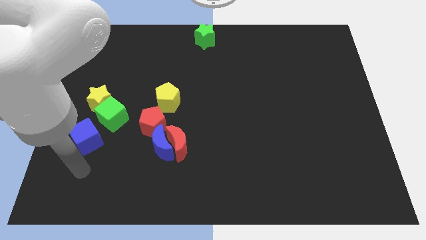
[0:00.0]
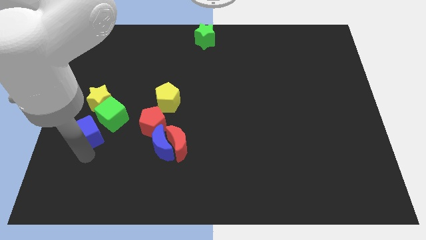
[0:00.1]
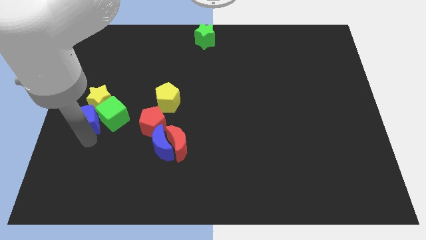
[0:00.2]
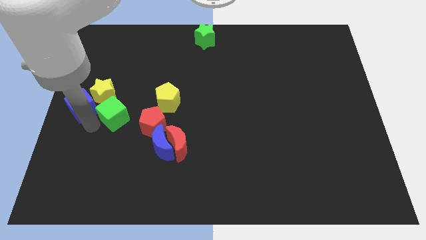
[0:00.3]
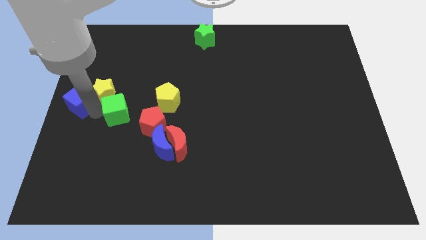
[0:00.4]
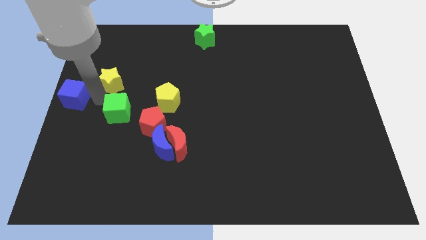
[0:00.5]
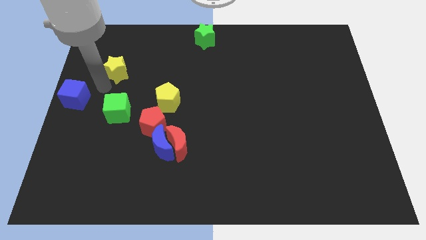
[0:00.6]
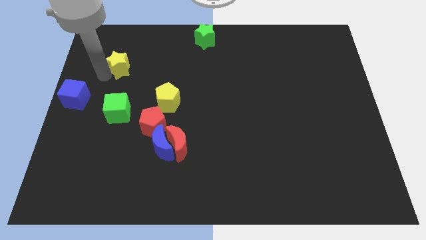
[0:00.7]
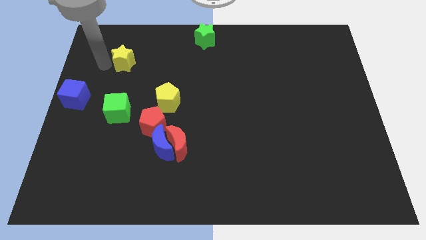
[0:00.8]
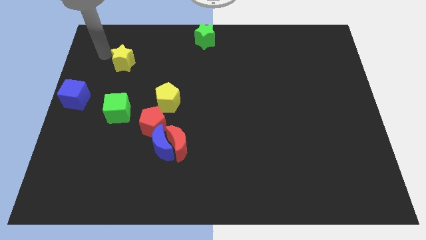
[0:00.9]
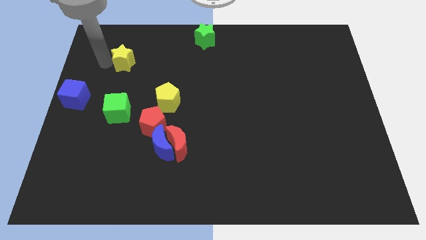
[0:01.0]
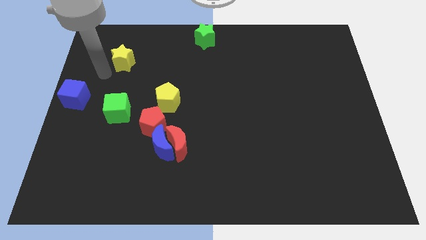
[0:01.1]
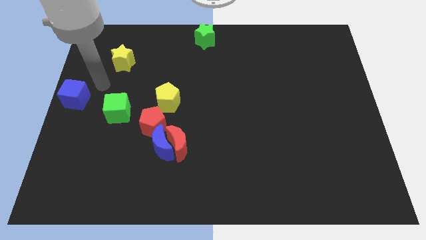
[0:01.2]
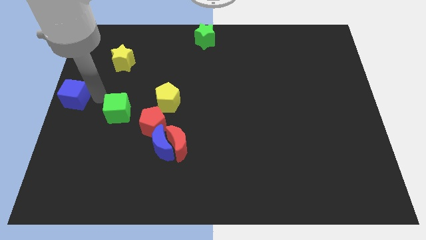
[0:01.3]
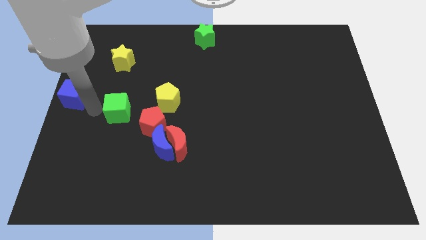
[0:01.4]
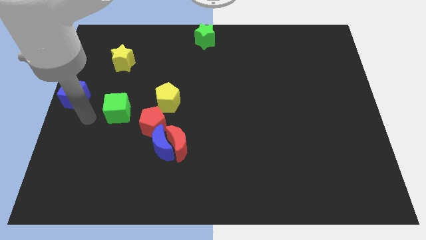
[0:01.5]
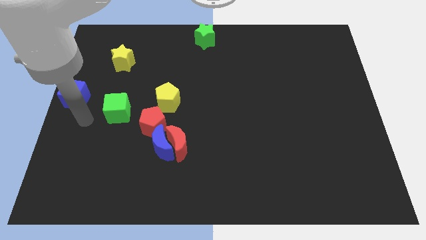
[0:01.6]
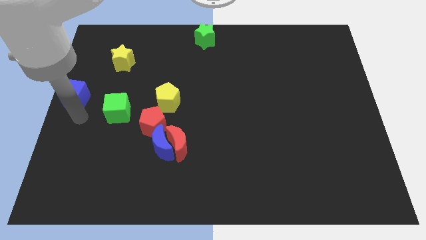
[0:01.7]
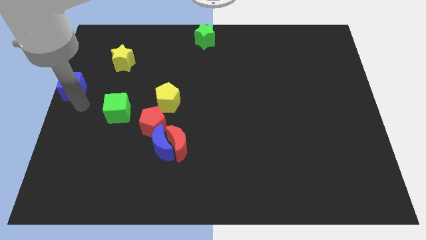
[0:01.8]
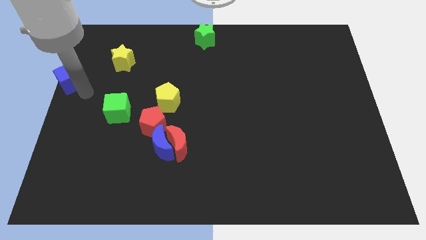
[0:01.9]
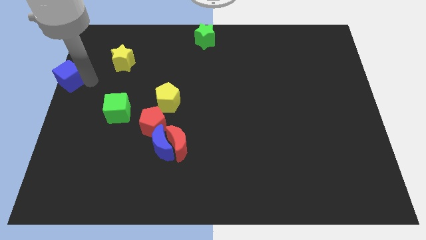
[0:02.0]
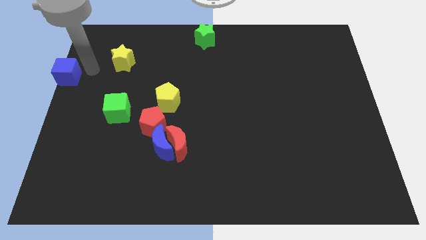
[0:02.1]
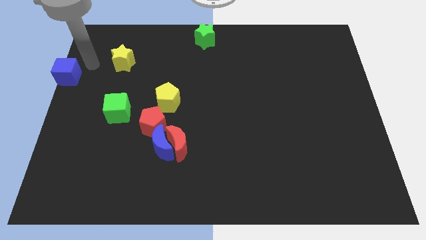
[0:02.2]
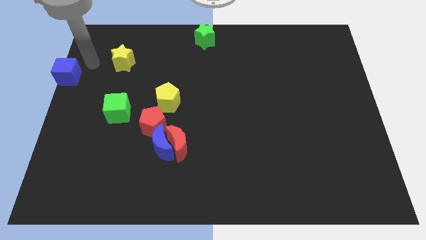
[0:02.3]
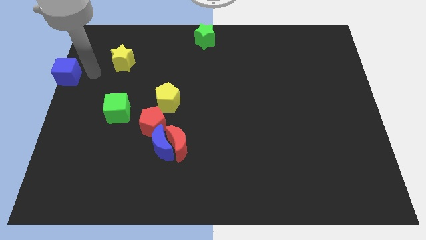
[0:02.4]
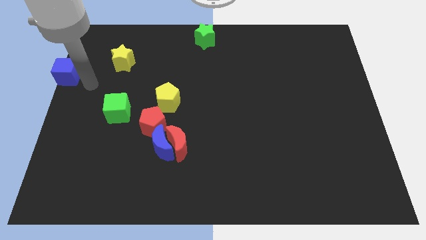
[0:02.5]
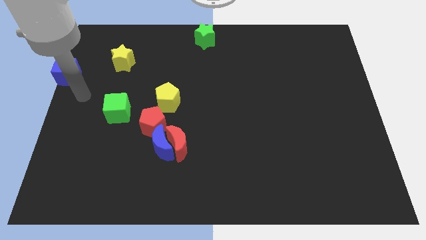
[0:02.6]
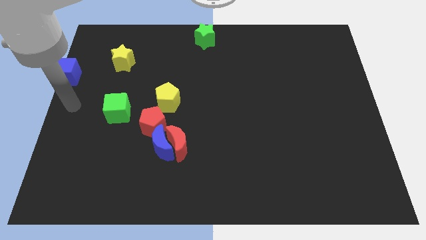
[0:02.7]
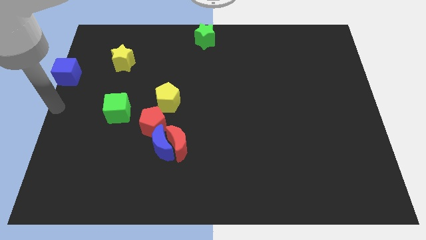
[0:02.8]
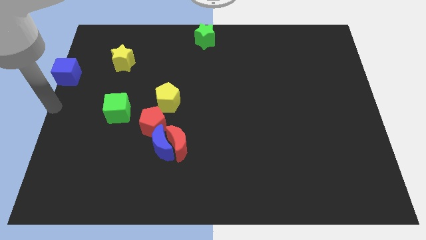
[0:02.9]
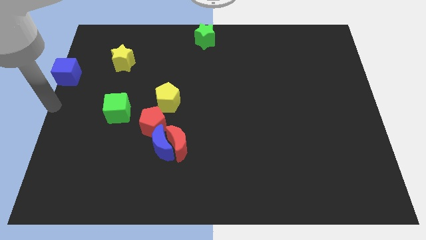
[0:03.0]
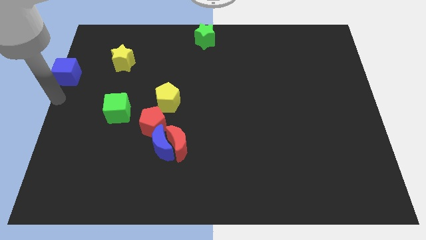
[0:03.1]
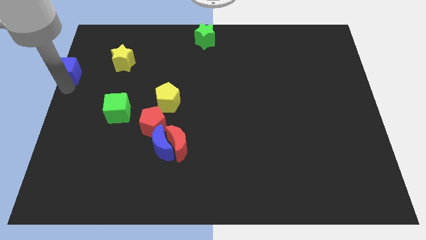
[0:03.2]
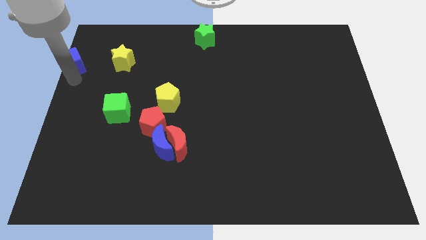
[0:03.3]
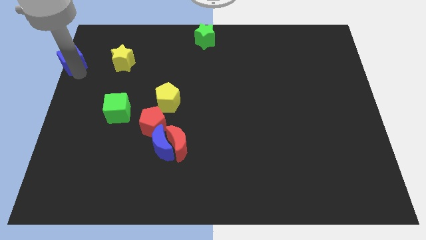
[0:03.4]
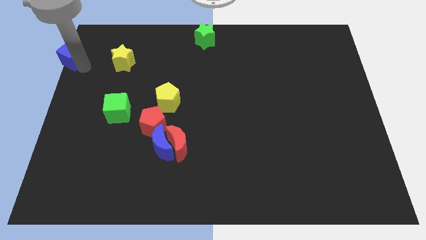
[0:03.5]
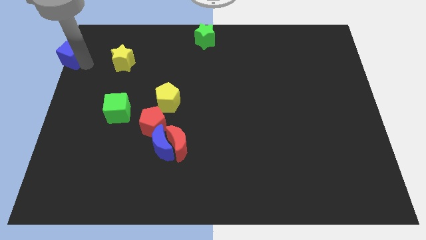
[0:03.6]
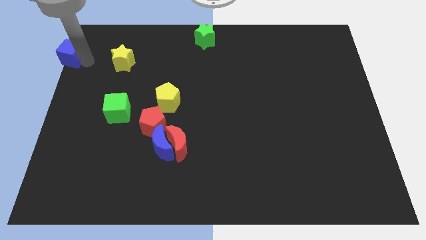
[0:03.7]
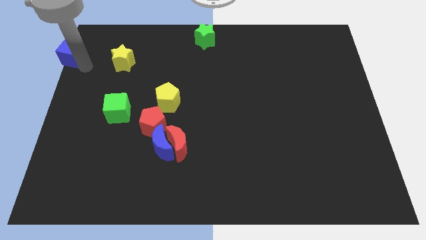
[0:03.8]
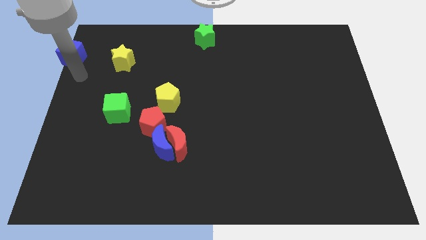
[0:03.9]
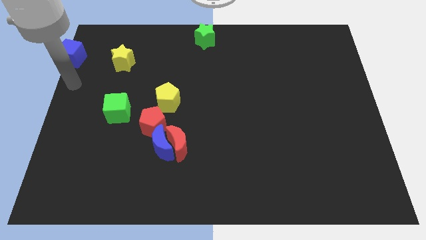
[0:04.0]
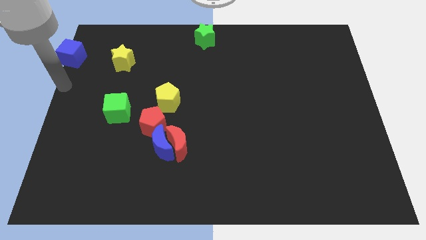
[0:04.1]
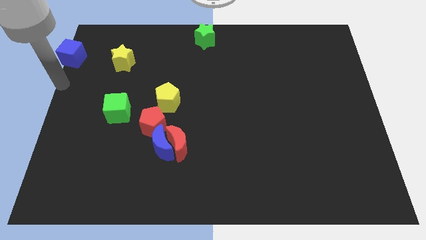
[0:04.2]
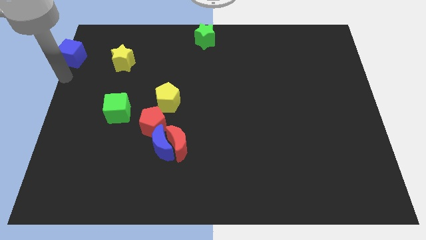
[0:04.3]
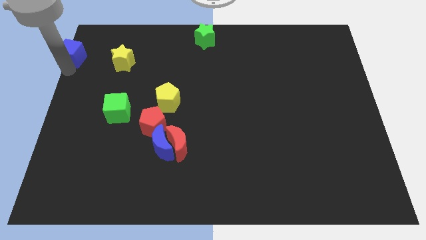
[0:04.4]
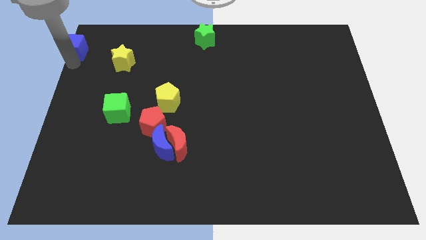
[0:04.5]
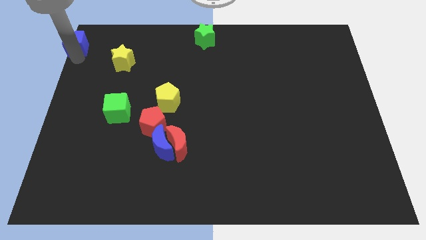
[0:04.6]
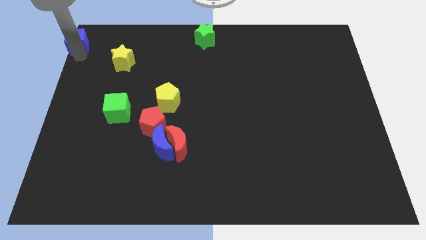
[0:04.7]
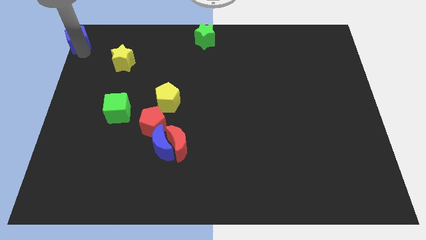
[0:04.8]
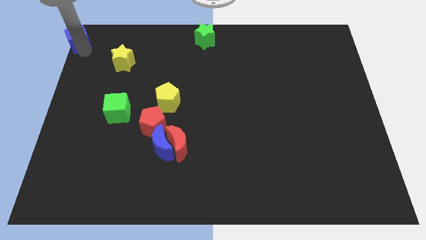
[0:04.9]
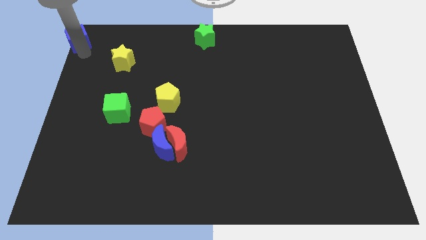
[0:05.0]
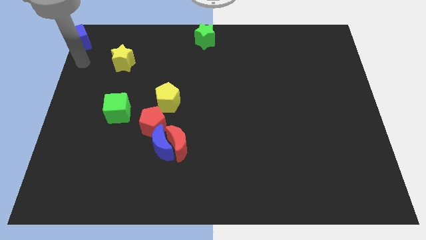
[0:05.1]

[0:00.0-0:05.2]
move the blue cube to the top left corner of the board

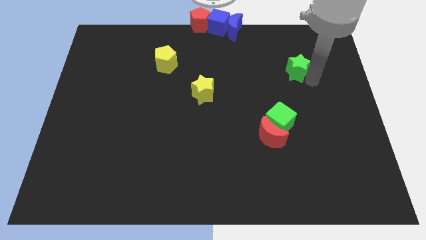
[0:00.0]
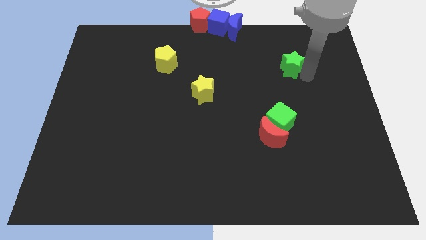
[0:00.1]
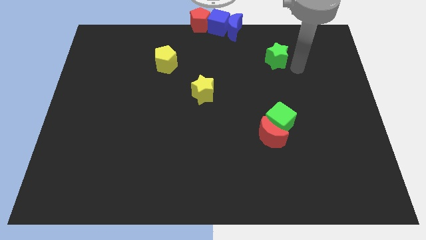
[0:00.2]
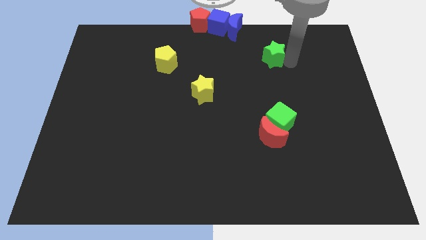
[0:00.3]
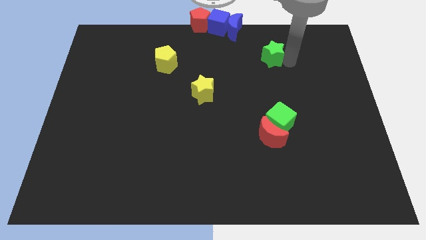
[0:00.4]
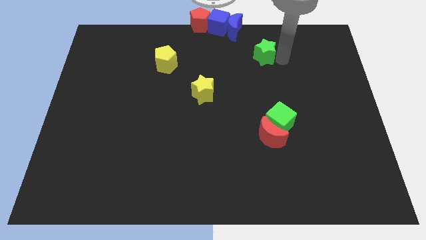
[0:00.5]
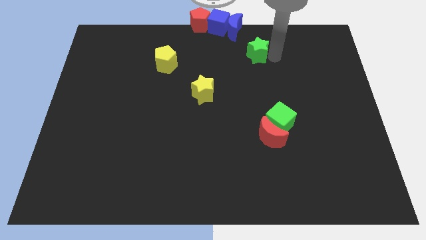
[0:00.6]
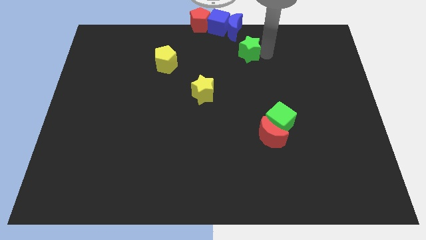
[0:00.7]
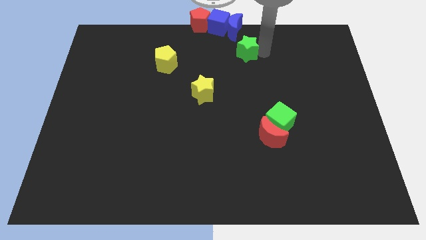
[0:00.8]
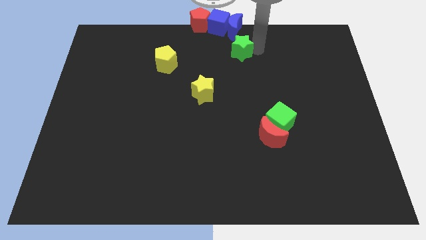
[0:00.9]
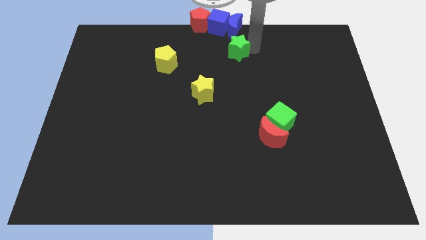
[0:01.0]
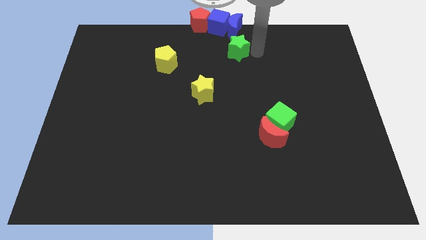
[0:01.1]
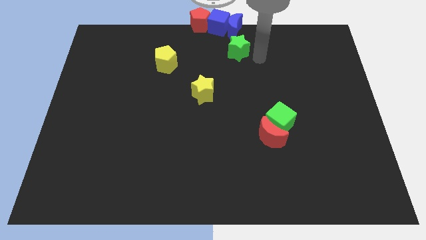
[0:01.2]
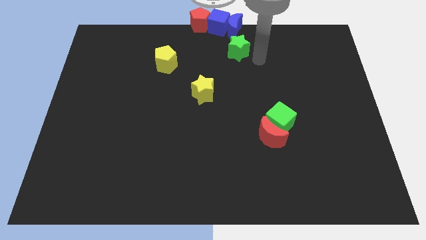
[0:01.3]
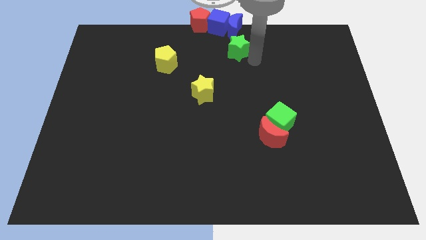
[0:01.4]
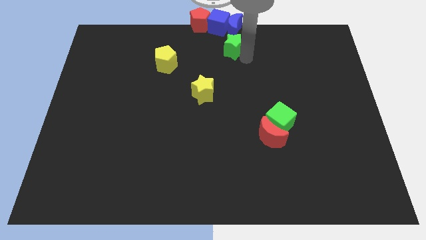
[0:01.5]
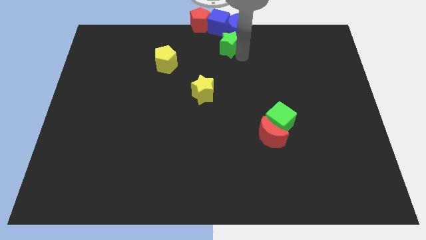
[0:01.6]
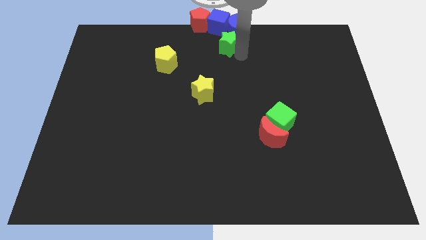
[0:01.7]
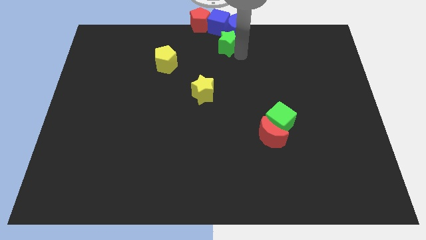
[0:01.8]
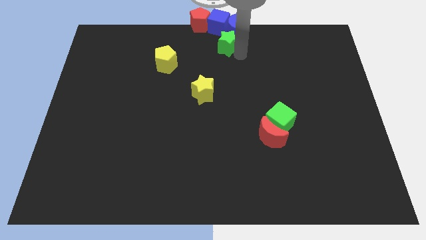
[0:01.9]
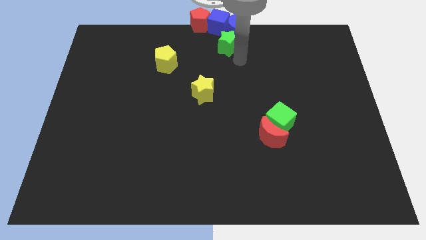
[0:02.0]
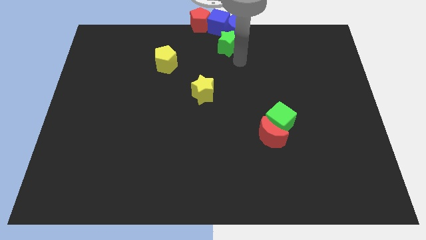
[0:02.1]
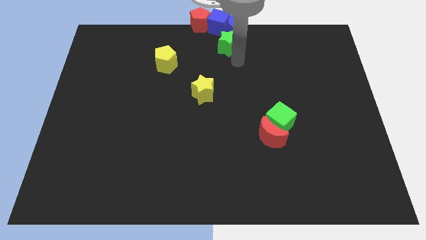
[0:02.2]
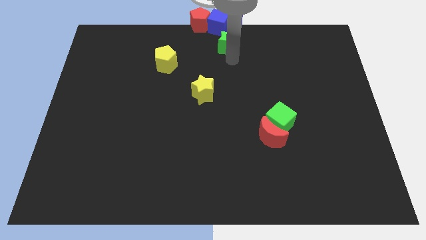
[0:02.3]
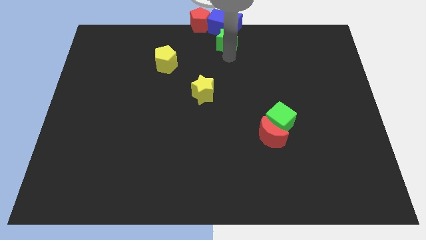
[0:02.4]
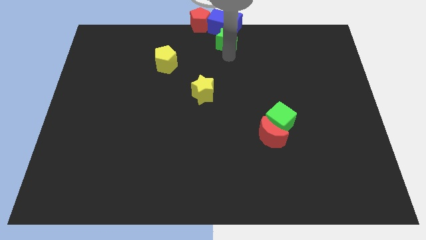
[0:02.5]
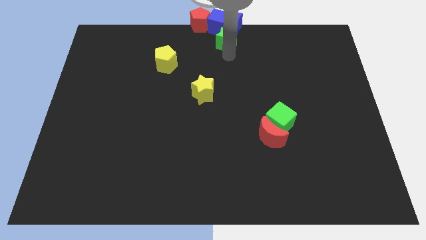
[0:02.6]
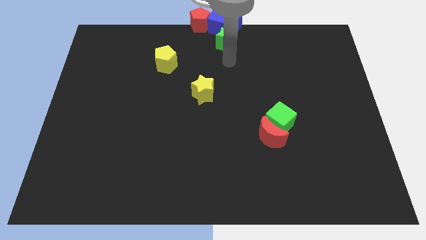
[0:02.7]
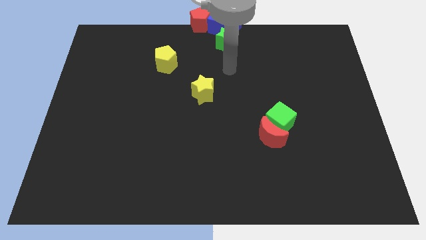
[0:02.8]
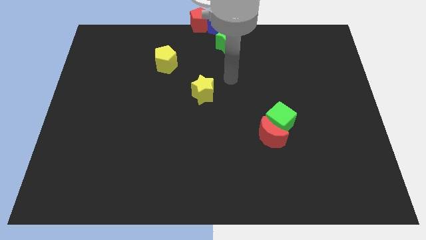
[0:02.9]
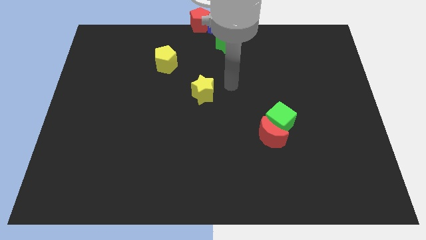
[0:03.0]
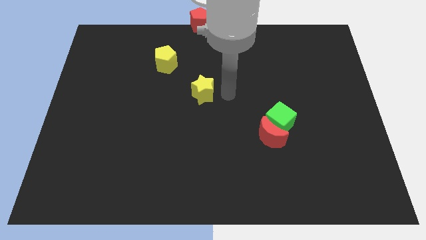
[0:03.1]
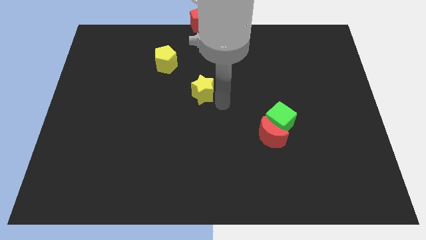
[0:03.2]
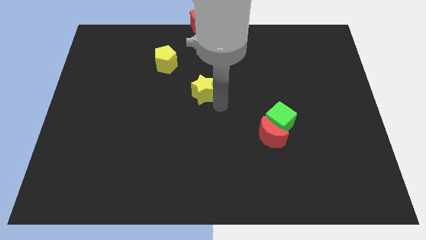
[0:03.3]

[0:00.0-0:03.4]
place the green star at the top right of the yellow star

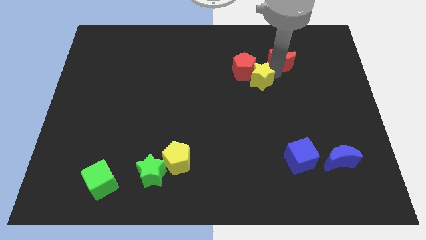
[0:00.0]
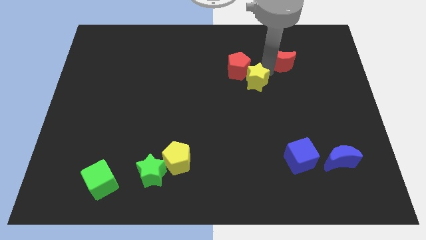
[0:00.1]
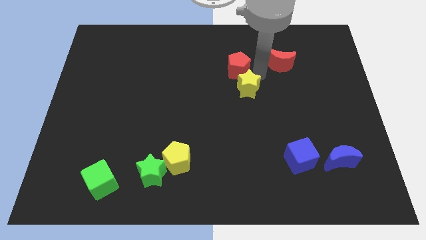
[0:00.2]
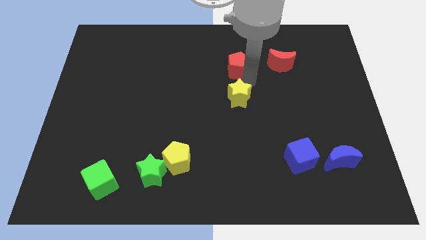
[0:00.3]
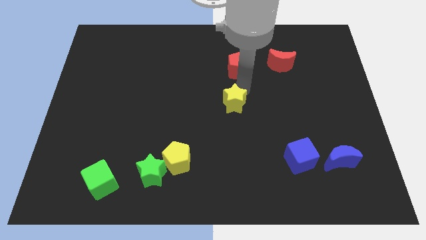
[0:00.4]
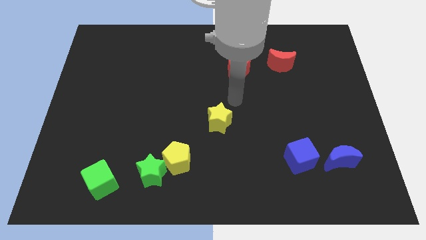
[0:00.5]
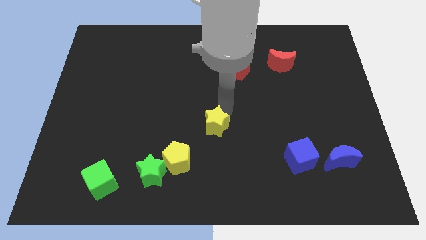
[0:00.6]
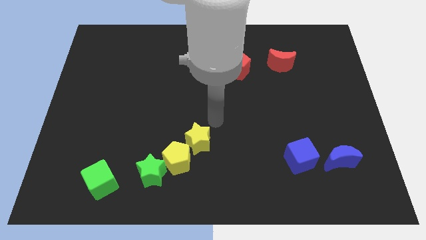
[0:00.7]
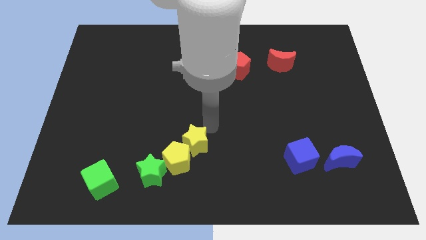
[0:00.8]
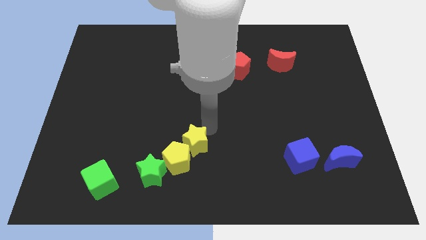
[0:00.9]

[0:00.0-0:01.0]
move the yellow star to the top right of the yellow pentagon
